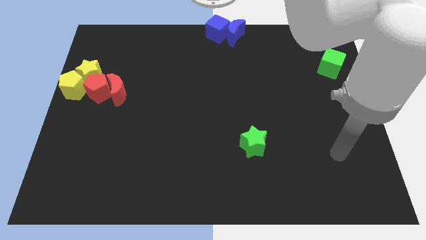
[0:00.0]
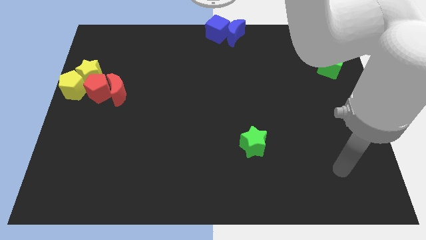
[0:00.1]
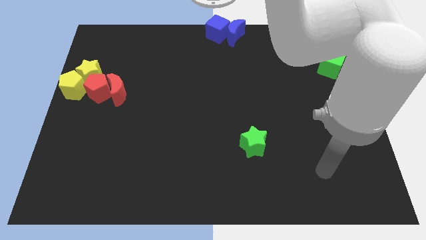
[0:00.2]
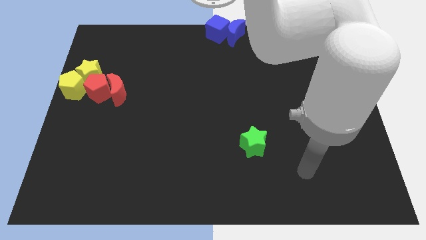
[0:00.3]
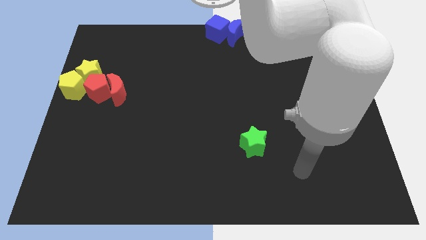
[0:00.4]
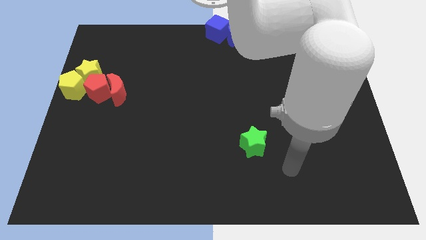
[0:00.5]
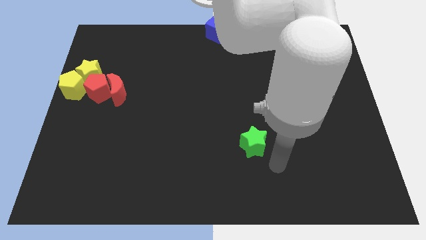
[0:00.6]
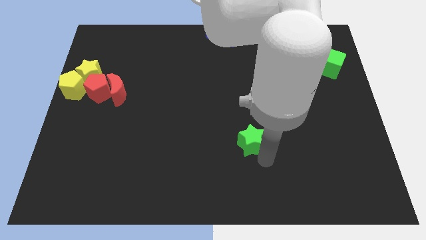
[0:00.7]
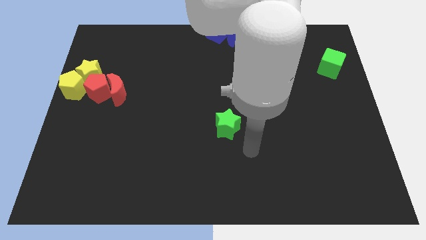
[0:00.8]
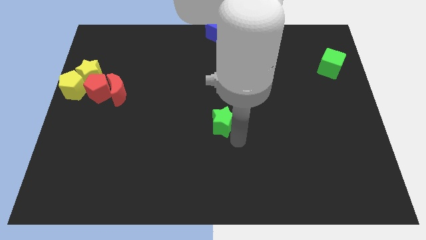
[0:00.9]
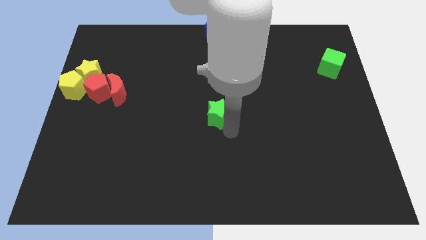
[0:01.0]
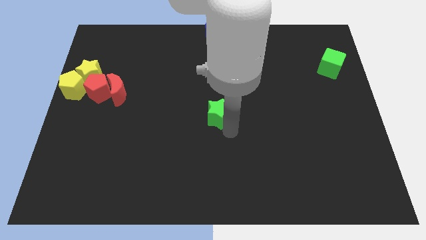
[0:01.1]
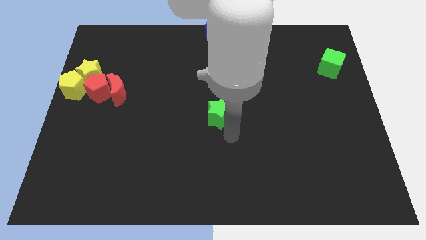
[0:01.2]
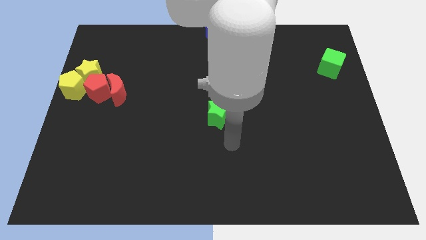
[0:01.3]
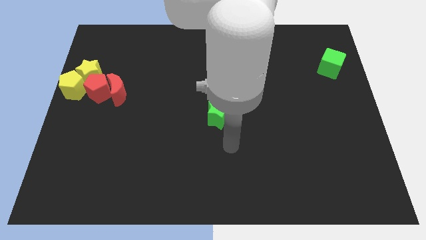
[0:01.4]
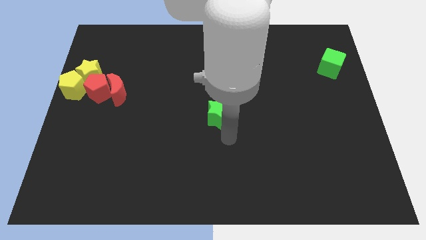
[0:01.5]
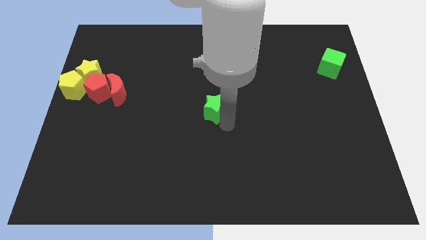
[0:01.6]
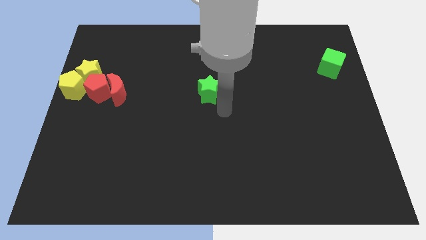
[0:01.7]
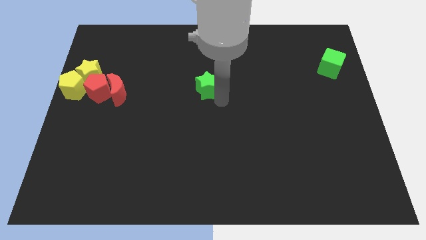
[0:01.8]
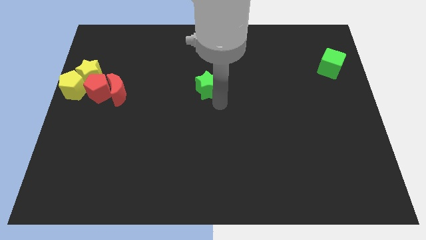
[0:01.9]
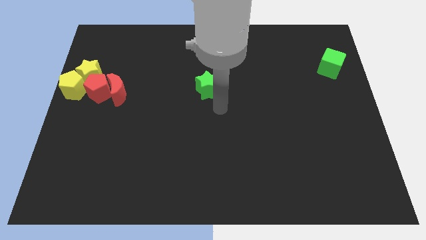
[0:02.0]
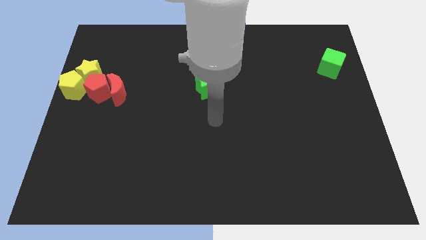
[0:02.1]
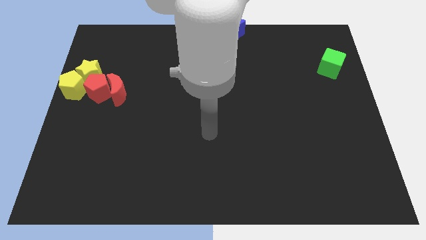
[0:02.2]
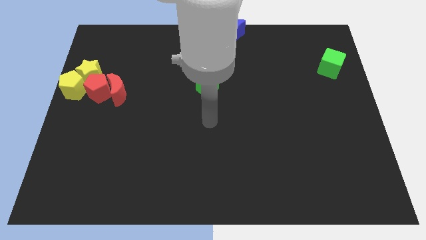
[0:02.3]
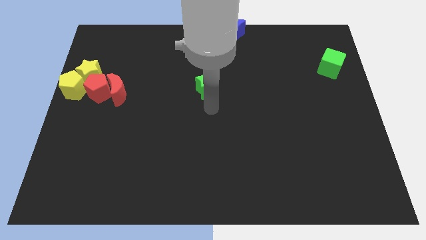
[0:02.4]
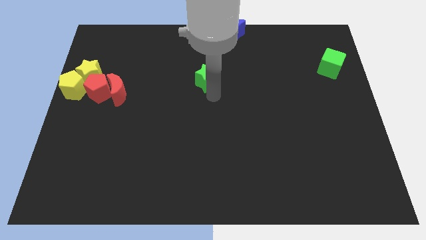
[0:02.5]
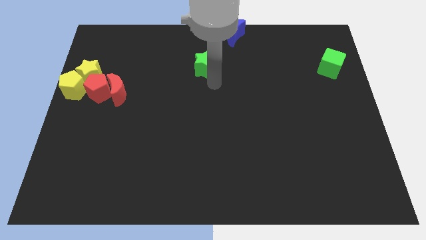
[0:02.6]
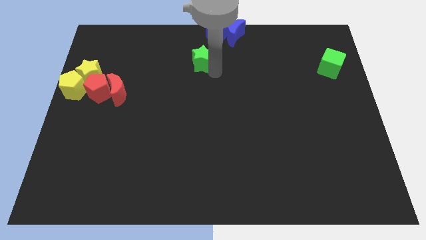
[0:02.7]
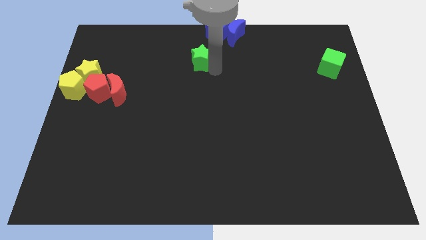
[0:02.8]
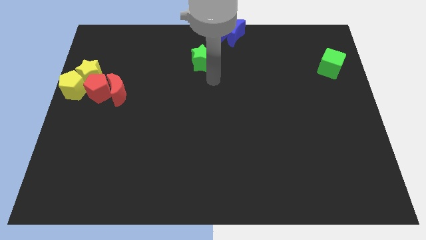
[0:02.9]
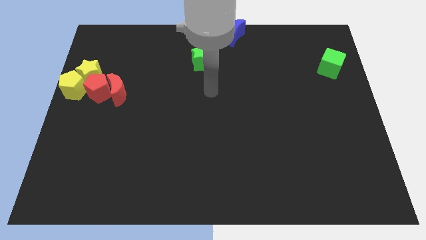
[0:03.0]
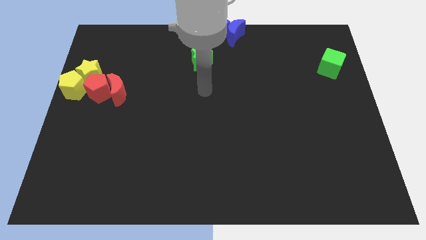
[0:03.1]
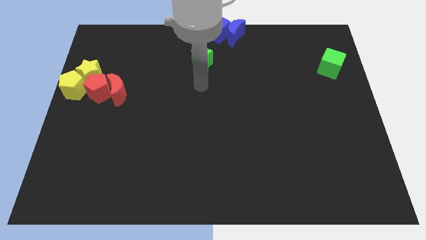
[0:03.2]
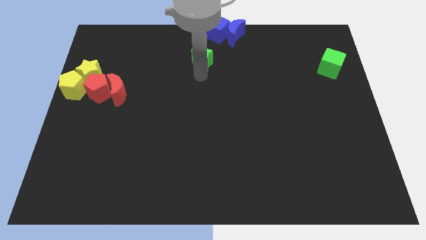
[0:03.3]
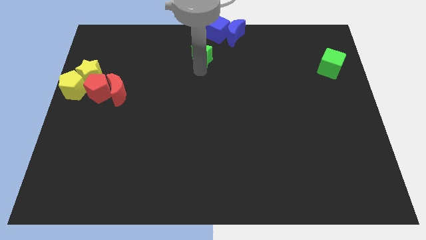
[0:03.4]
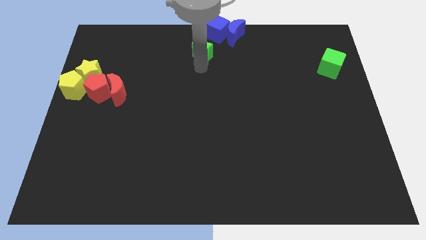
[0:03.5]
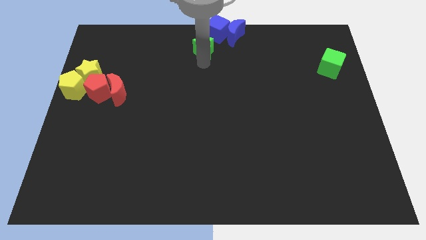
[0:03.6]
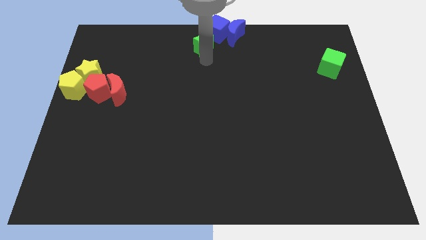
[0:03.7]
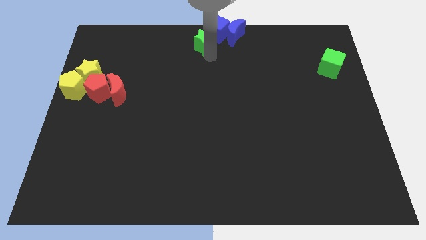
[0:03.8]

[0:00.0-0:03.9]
push the green star to the top center of the baord

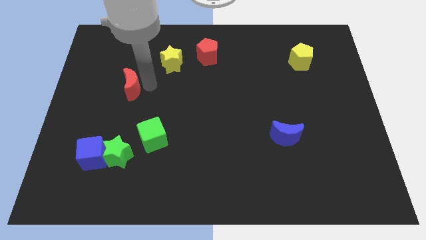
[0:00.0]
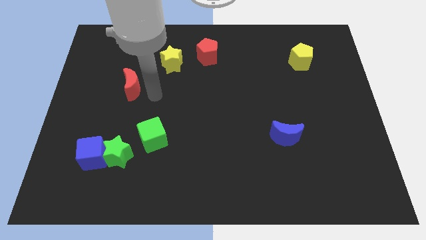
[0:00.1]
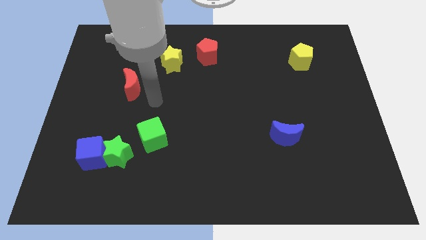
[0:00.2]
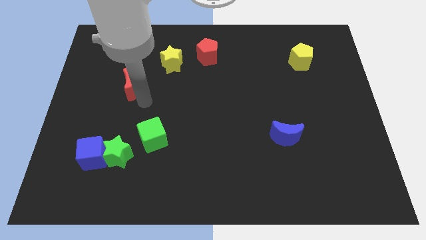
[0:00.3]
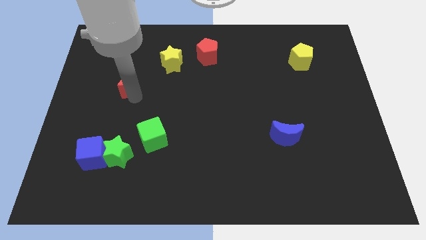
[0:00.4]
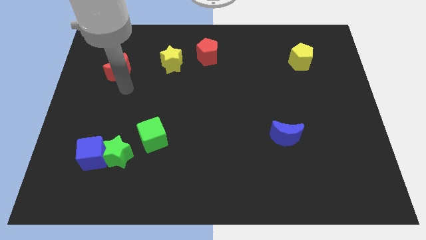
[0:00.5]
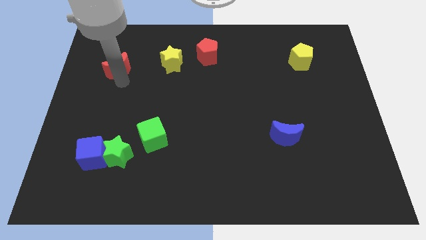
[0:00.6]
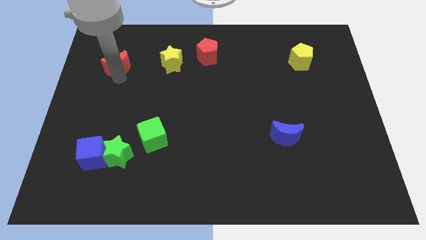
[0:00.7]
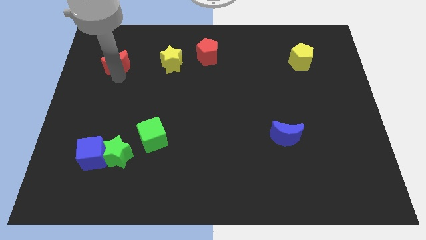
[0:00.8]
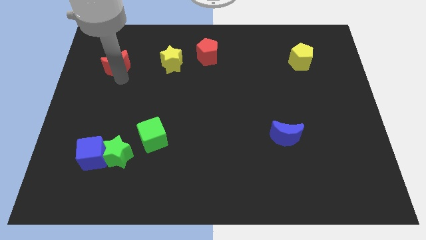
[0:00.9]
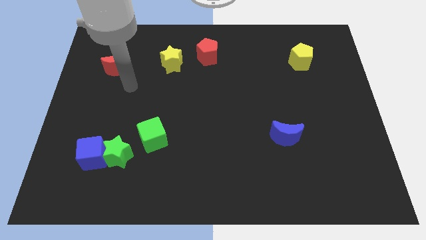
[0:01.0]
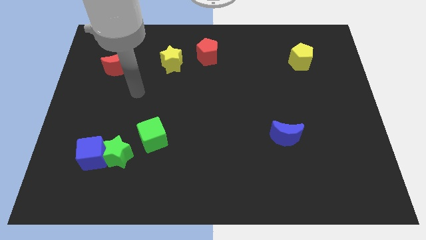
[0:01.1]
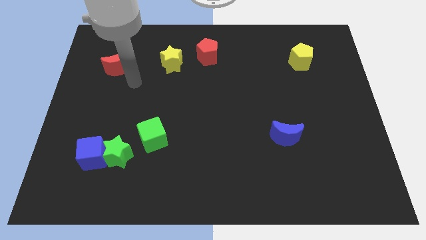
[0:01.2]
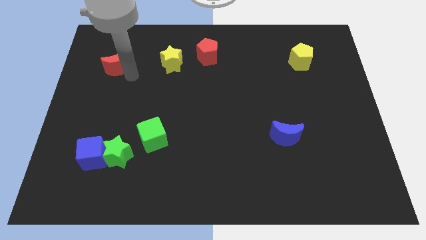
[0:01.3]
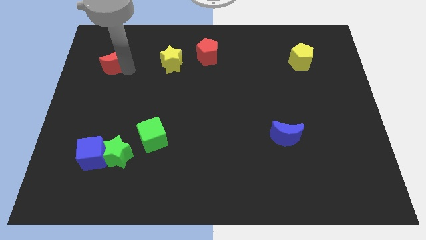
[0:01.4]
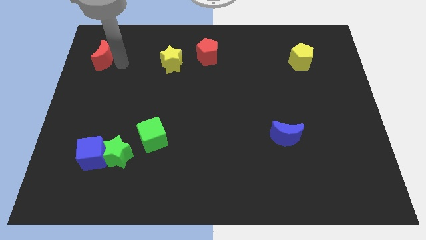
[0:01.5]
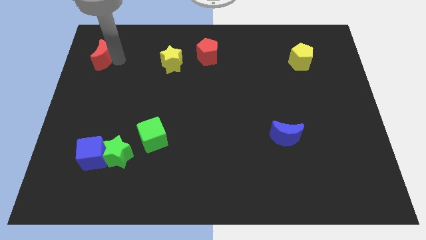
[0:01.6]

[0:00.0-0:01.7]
move the red moon to the left of the yellow star

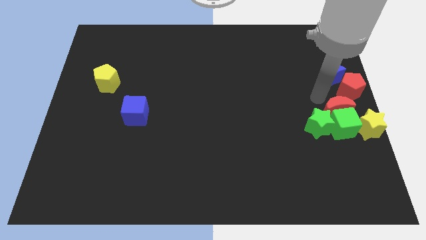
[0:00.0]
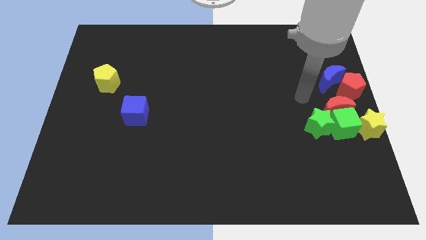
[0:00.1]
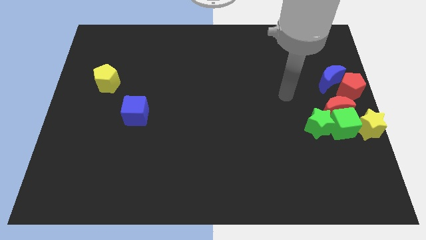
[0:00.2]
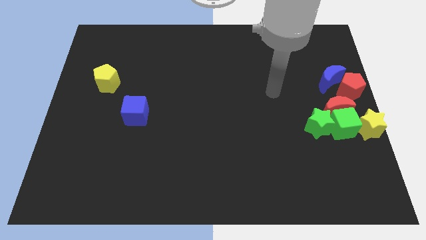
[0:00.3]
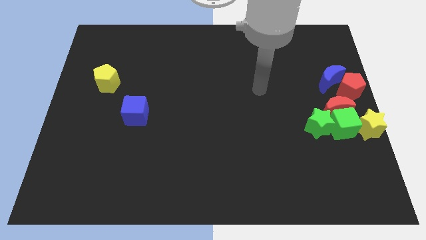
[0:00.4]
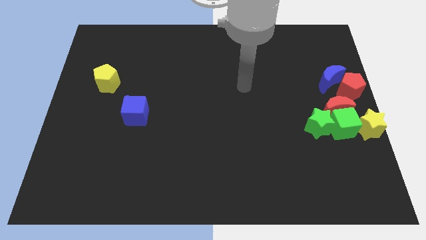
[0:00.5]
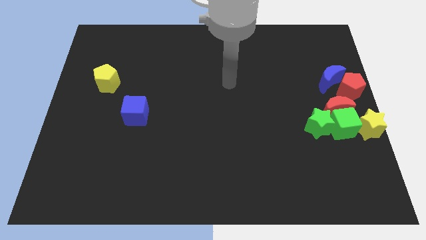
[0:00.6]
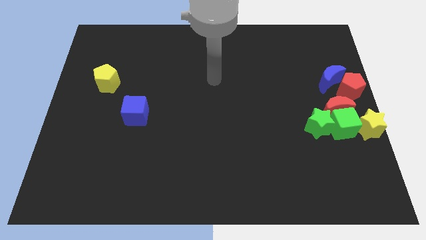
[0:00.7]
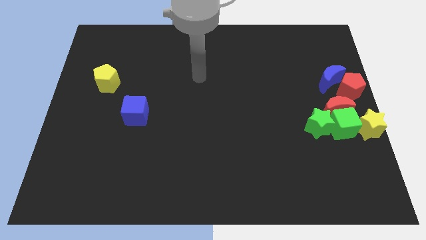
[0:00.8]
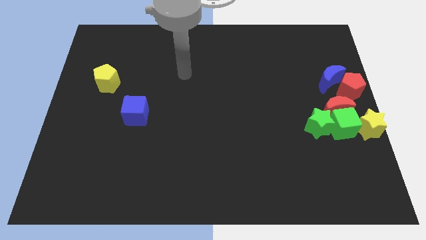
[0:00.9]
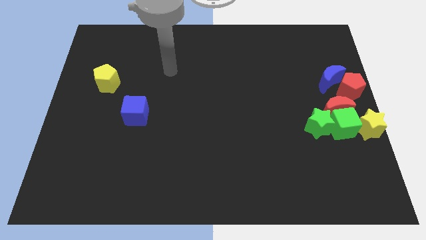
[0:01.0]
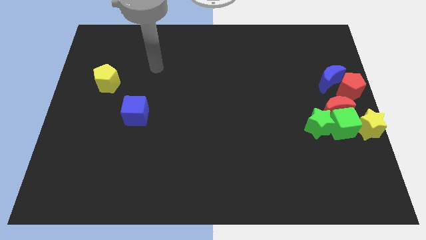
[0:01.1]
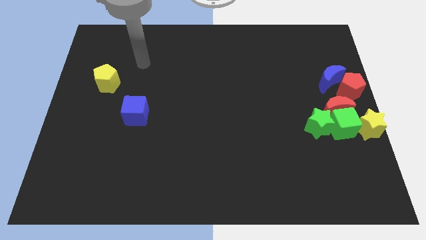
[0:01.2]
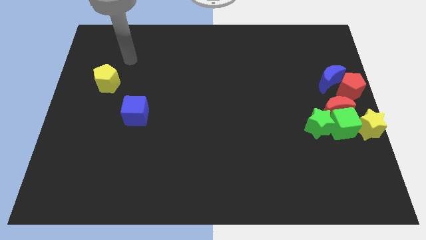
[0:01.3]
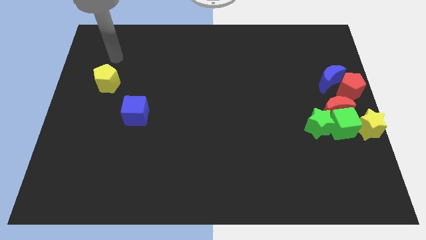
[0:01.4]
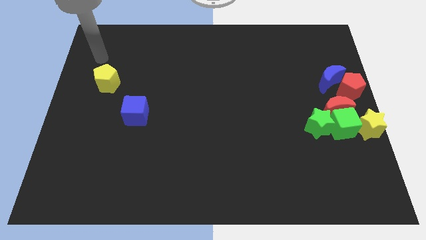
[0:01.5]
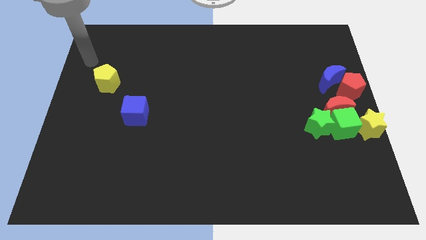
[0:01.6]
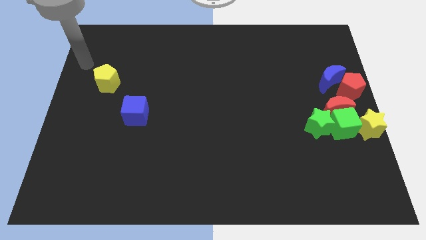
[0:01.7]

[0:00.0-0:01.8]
move away from the red crecent

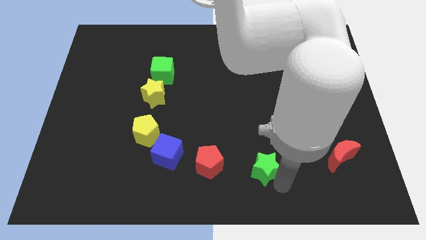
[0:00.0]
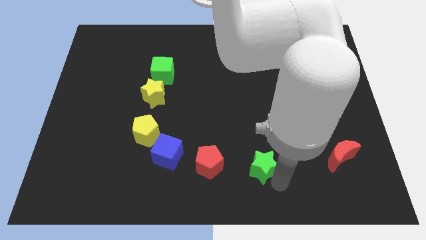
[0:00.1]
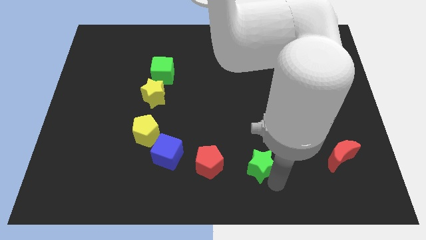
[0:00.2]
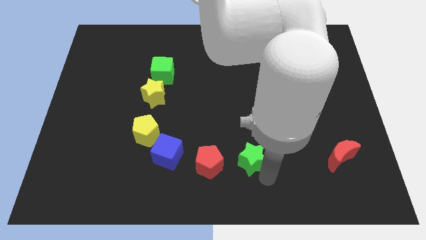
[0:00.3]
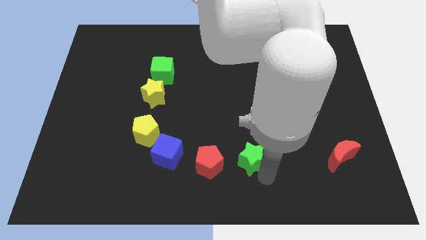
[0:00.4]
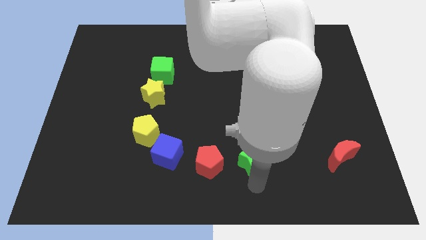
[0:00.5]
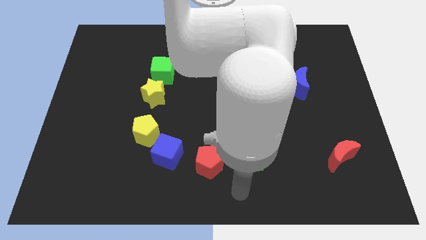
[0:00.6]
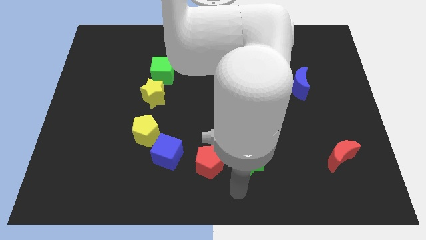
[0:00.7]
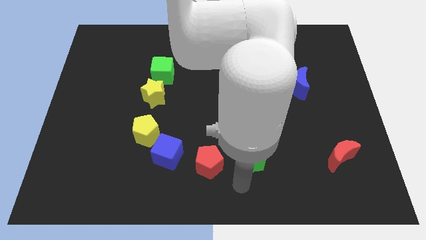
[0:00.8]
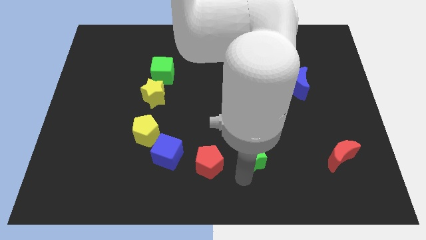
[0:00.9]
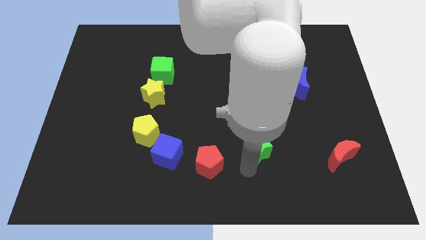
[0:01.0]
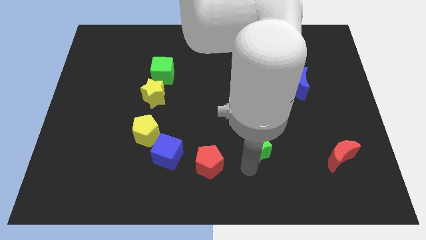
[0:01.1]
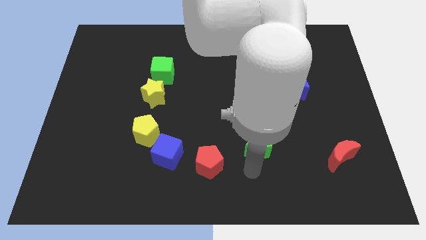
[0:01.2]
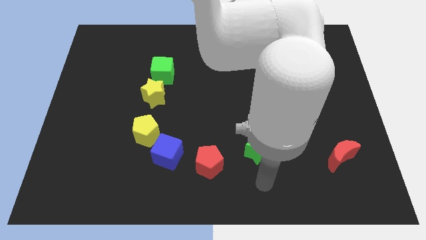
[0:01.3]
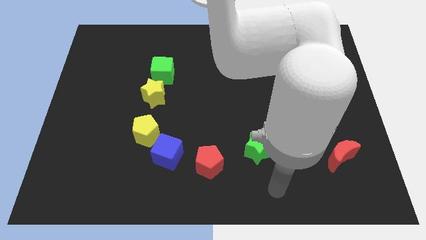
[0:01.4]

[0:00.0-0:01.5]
push the green star slightly upwards
